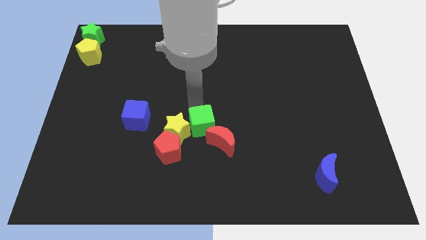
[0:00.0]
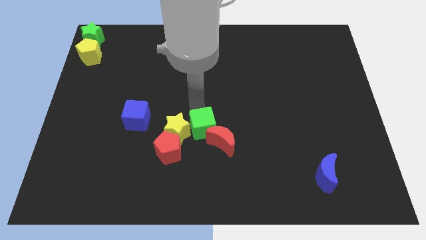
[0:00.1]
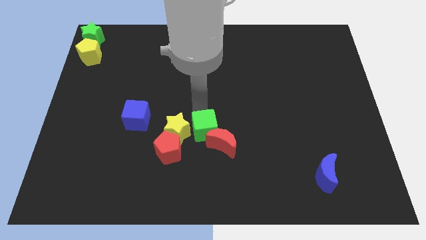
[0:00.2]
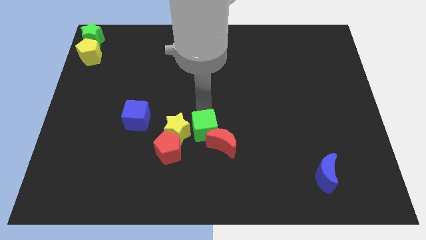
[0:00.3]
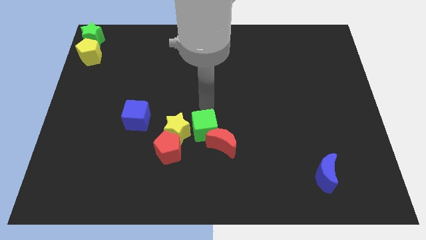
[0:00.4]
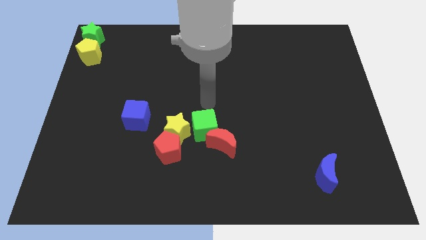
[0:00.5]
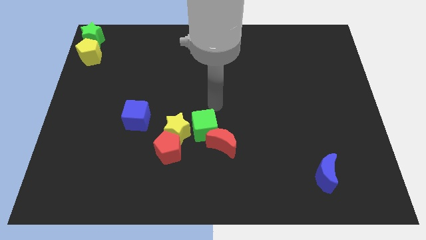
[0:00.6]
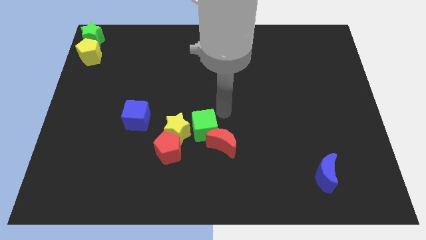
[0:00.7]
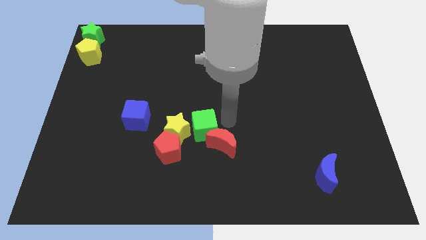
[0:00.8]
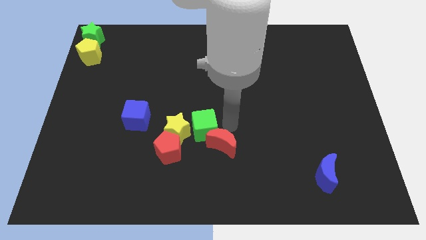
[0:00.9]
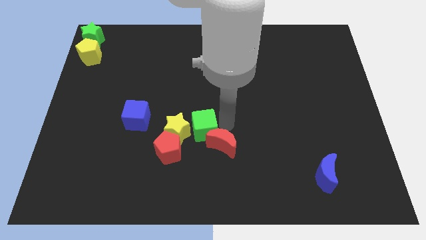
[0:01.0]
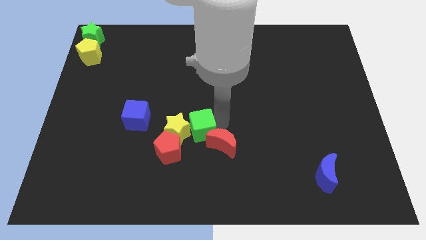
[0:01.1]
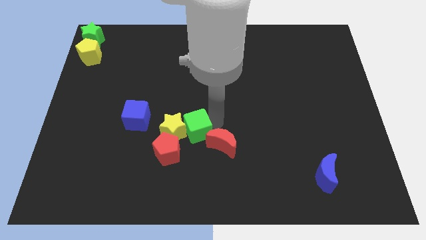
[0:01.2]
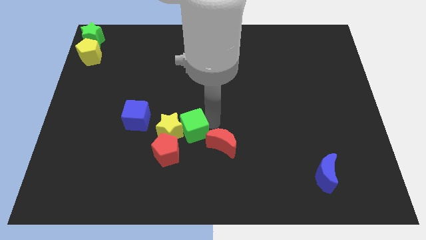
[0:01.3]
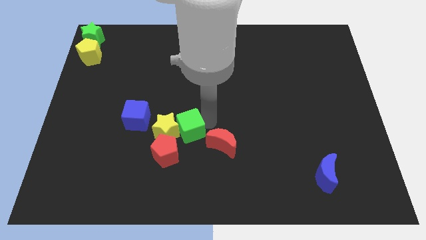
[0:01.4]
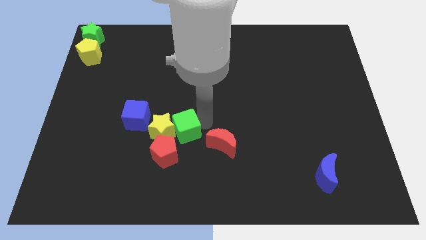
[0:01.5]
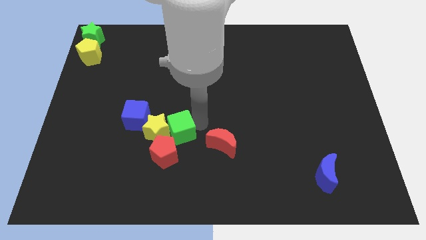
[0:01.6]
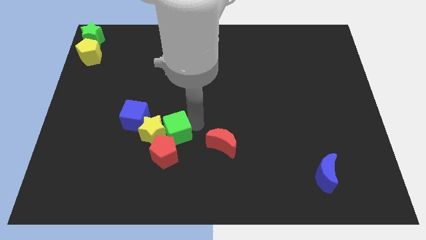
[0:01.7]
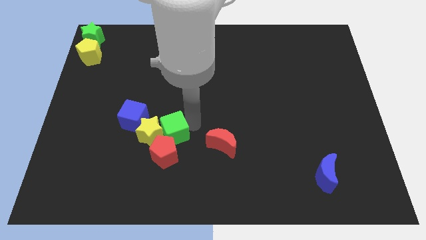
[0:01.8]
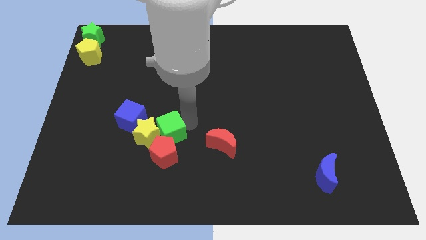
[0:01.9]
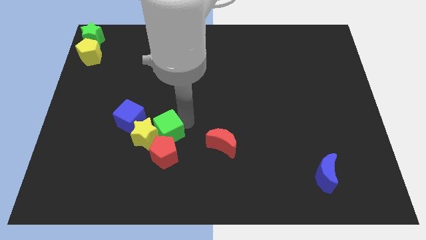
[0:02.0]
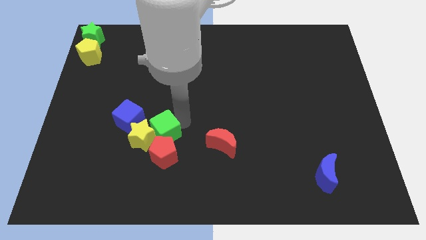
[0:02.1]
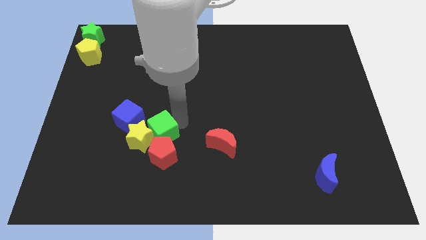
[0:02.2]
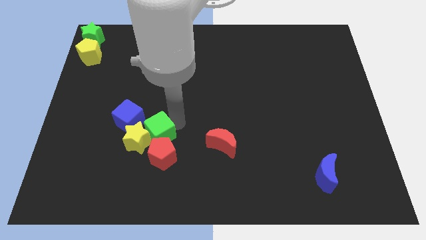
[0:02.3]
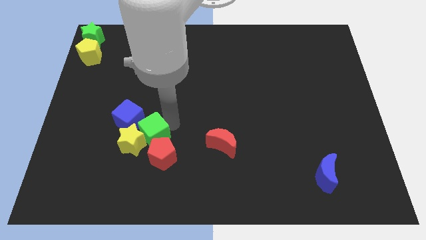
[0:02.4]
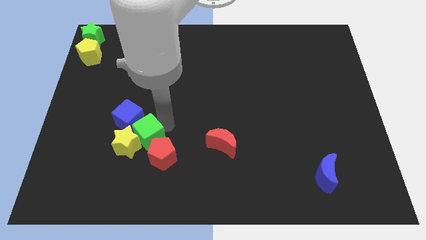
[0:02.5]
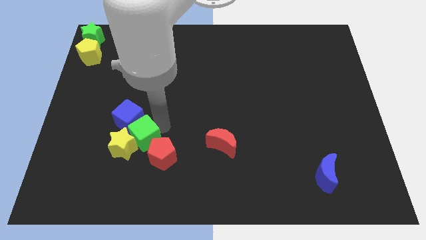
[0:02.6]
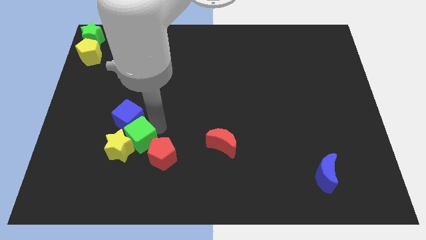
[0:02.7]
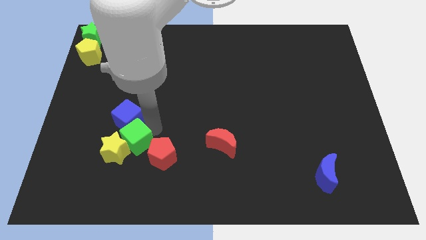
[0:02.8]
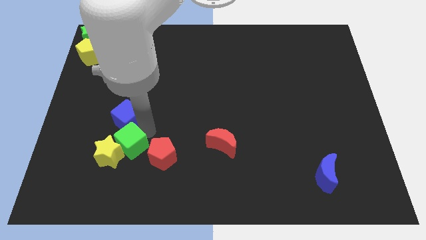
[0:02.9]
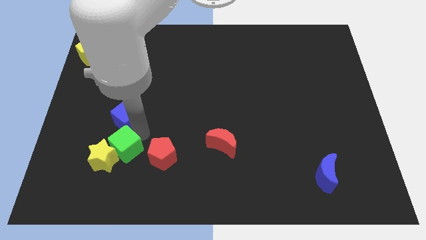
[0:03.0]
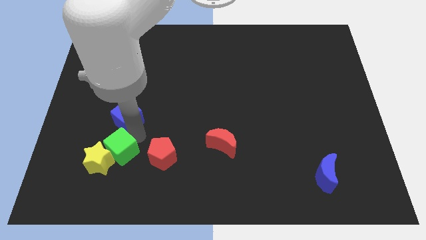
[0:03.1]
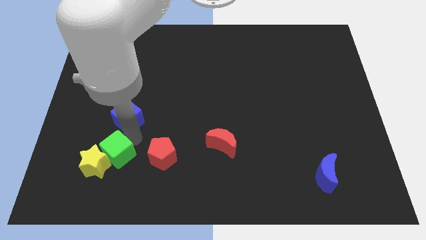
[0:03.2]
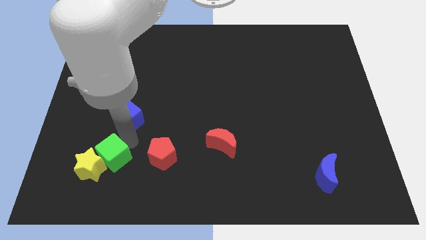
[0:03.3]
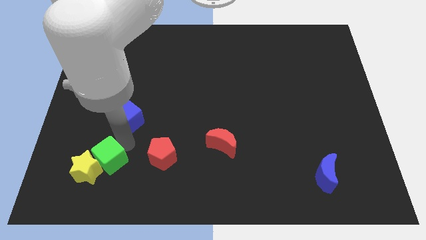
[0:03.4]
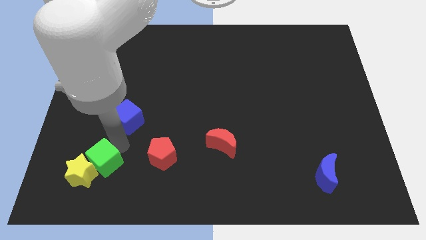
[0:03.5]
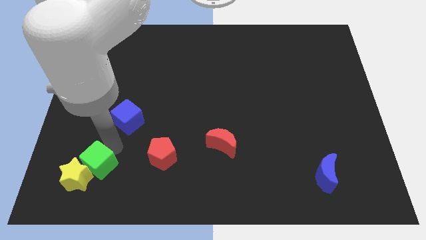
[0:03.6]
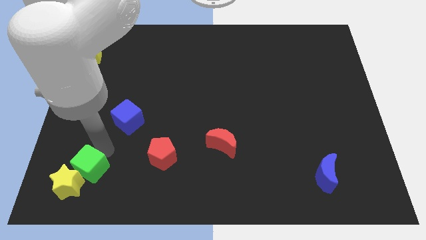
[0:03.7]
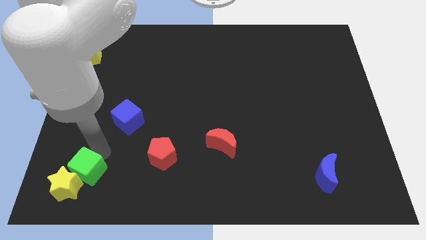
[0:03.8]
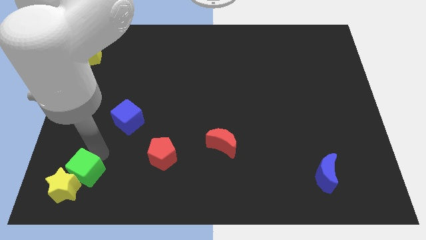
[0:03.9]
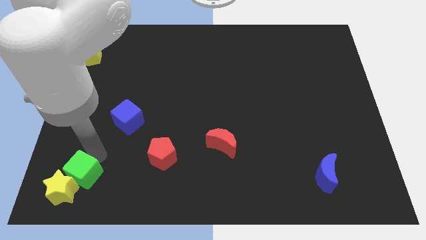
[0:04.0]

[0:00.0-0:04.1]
slide the green cube diagonally to the red crescent

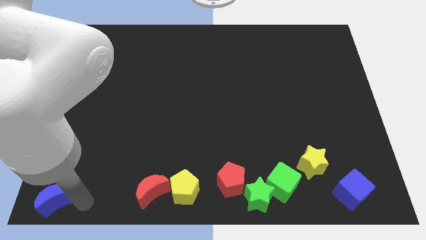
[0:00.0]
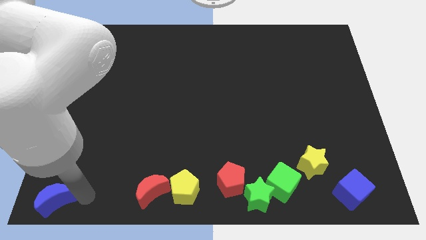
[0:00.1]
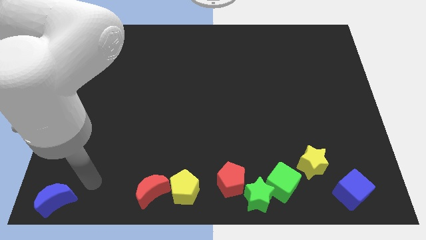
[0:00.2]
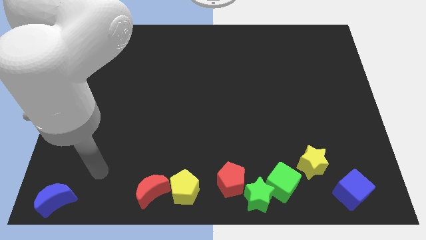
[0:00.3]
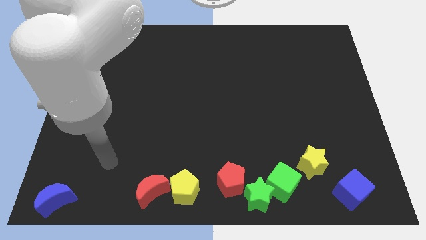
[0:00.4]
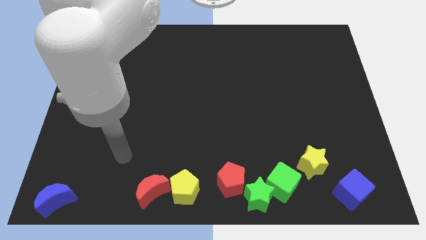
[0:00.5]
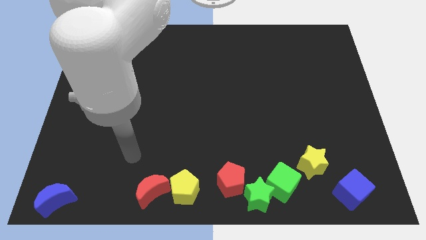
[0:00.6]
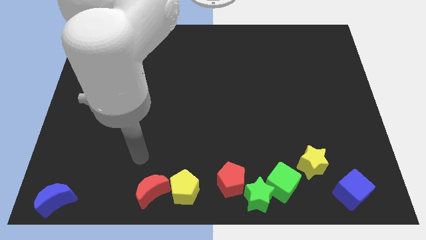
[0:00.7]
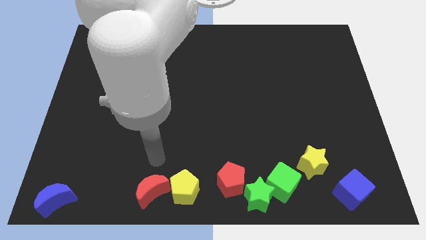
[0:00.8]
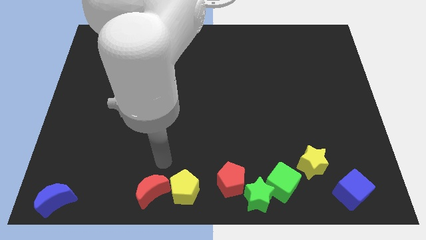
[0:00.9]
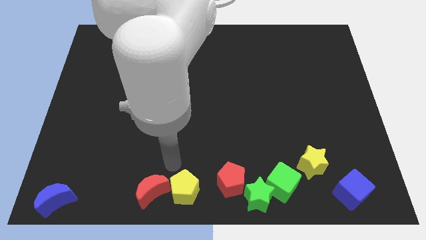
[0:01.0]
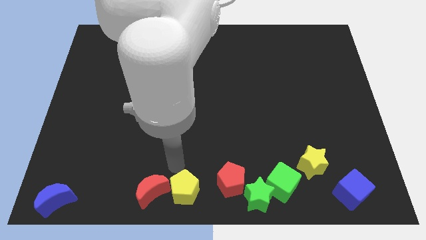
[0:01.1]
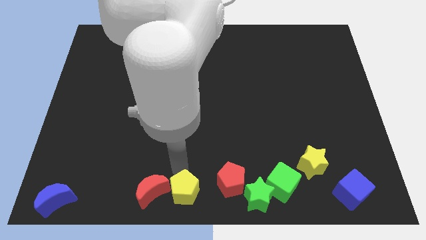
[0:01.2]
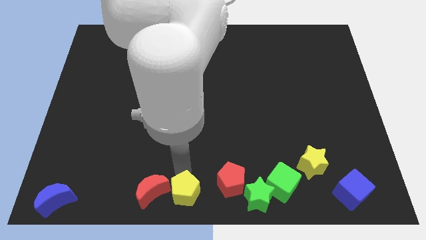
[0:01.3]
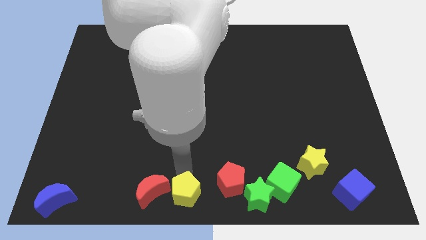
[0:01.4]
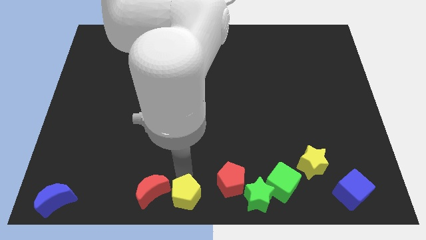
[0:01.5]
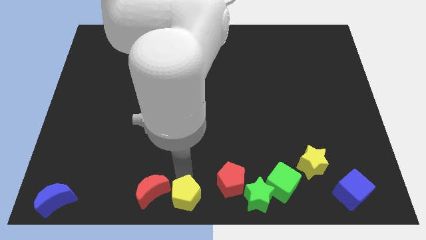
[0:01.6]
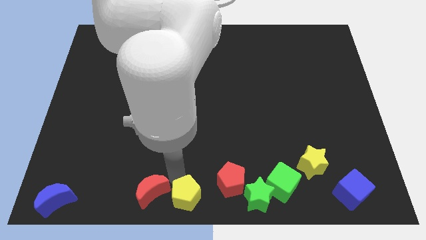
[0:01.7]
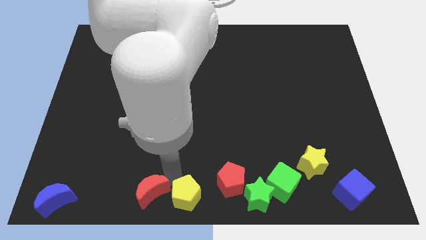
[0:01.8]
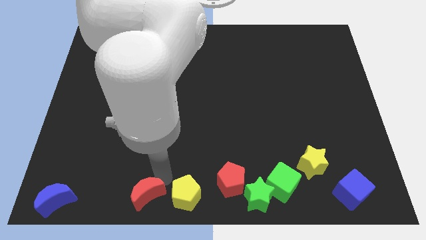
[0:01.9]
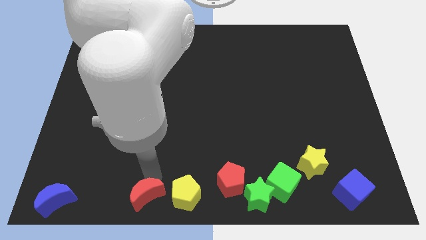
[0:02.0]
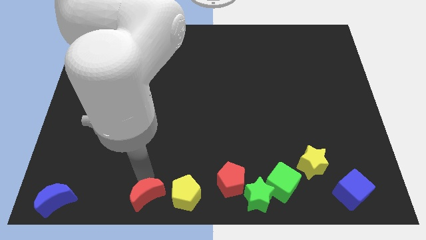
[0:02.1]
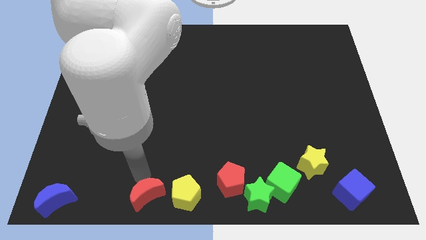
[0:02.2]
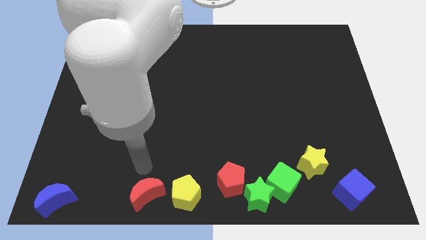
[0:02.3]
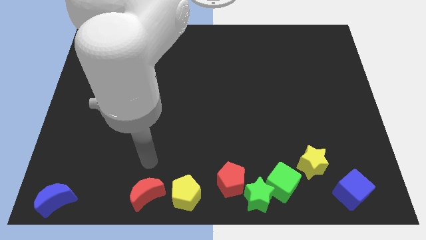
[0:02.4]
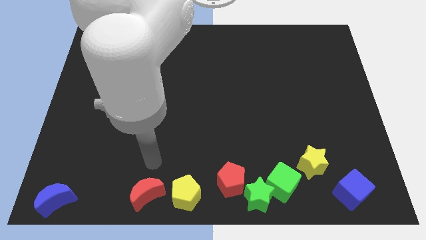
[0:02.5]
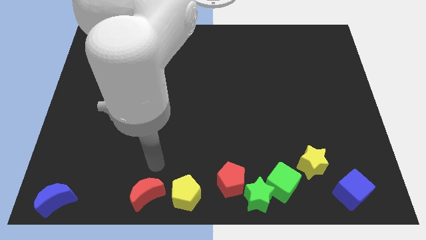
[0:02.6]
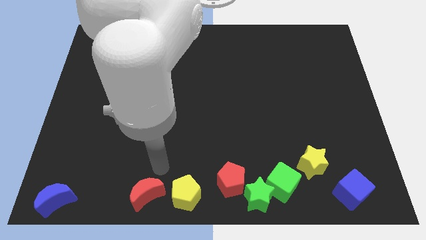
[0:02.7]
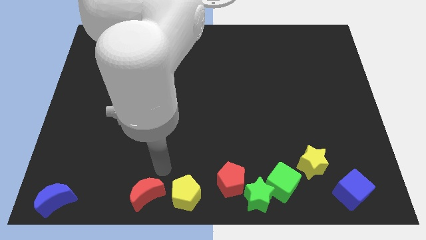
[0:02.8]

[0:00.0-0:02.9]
move your arm away from the blue moon

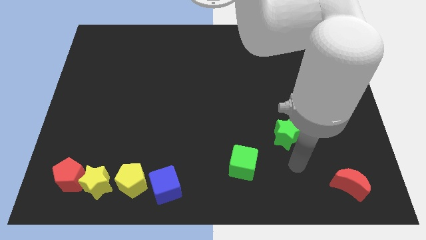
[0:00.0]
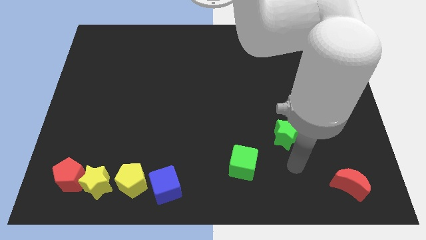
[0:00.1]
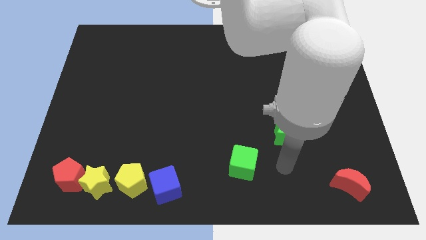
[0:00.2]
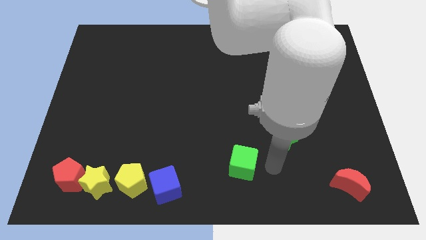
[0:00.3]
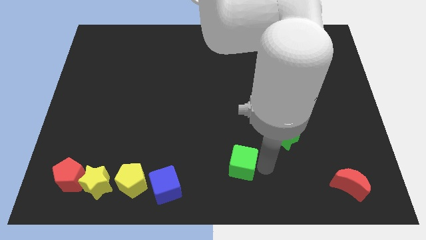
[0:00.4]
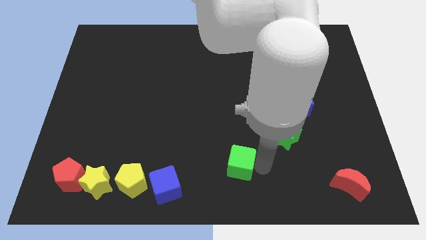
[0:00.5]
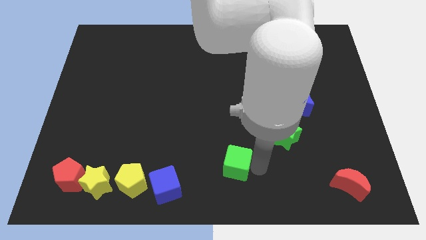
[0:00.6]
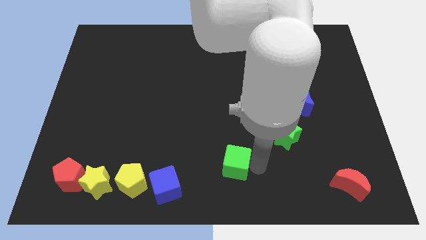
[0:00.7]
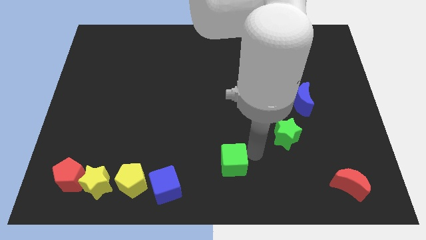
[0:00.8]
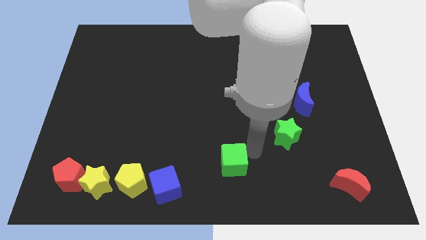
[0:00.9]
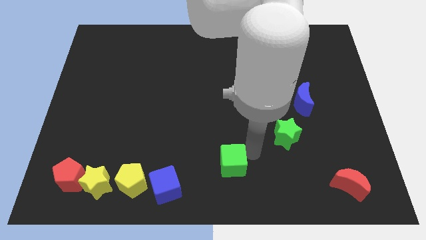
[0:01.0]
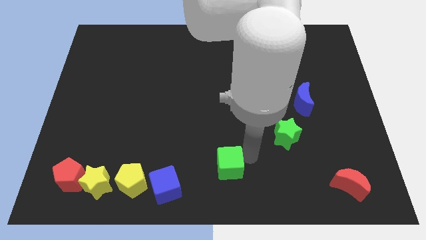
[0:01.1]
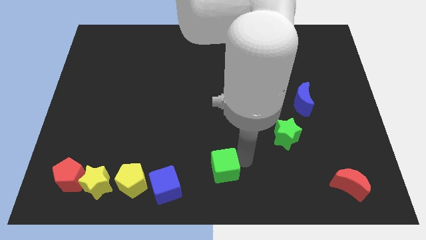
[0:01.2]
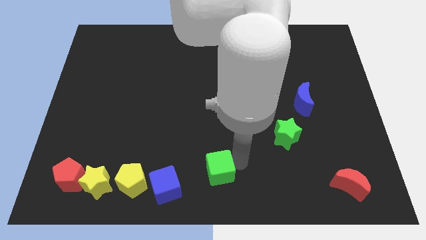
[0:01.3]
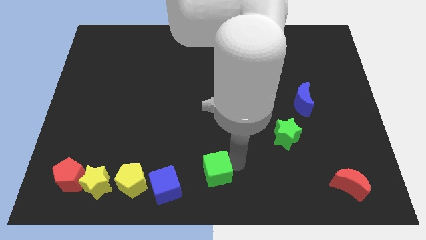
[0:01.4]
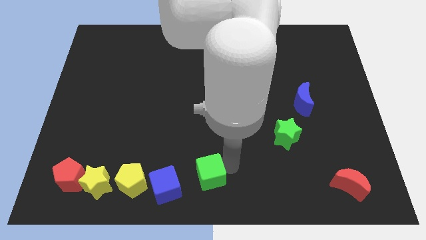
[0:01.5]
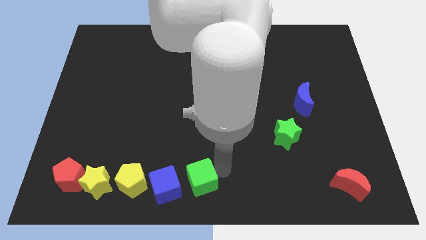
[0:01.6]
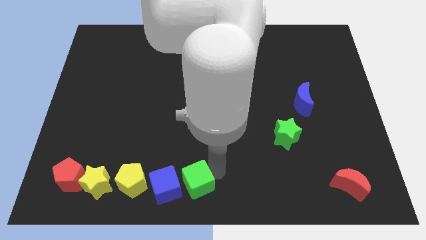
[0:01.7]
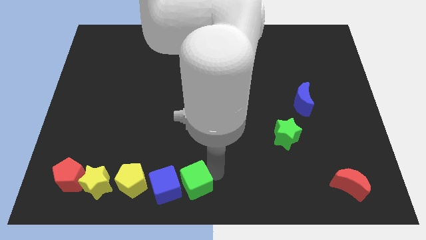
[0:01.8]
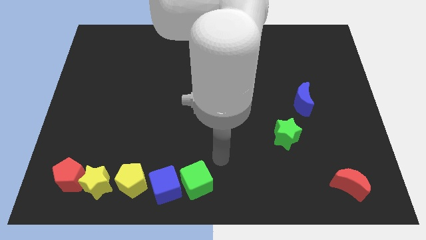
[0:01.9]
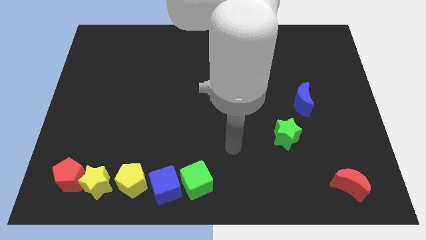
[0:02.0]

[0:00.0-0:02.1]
place the green cube to the right of blue cube
